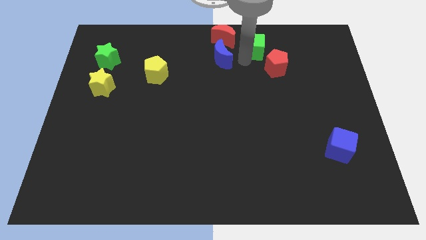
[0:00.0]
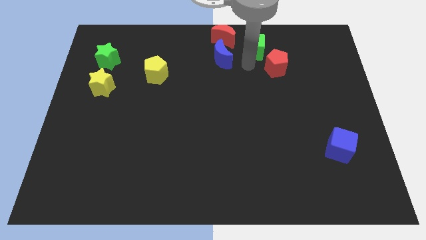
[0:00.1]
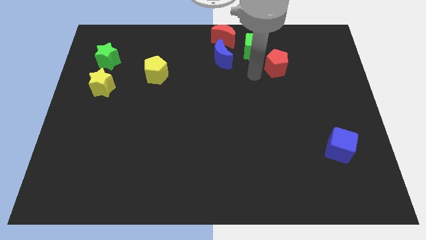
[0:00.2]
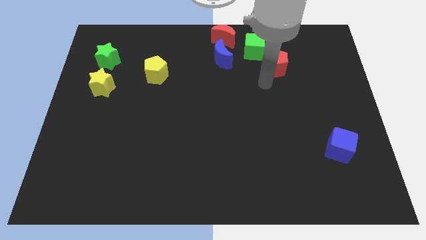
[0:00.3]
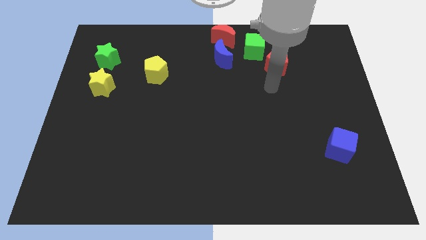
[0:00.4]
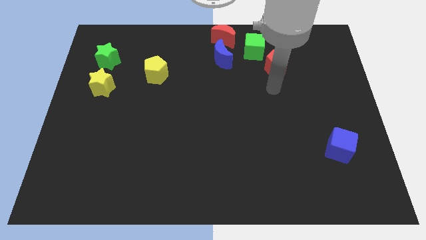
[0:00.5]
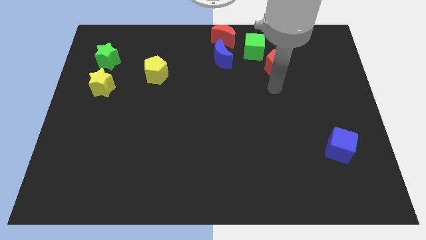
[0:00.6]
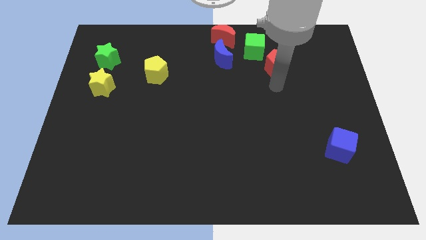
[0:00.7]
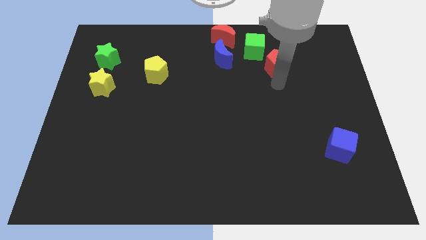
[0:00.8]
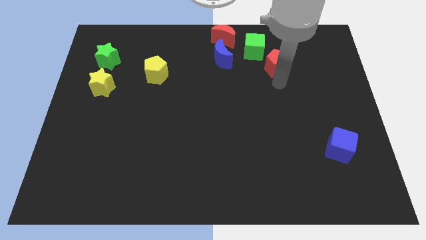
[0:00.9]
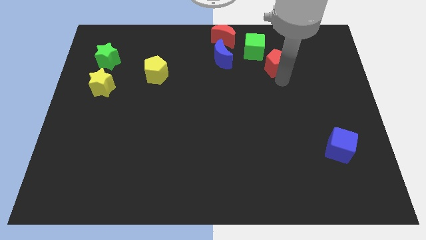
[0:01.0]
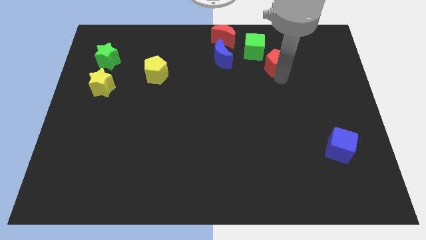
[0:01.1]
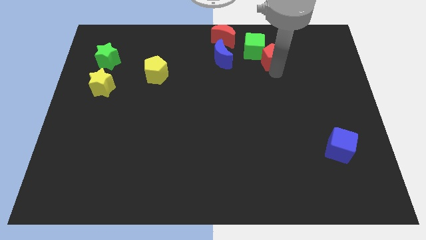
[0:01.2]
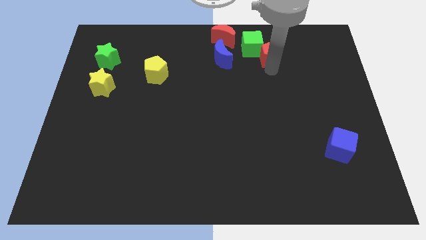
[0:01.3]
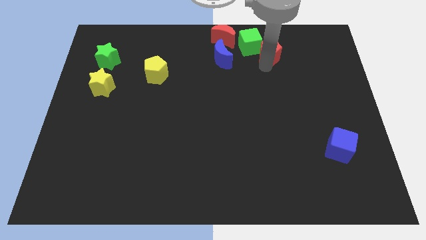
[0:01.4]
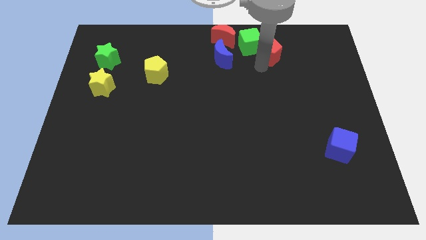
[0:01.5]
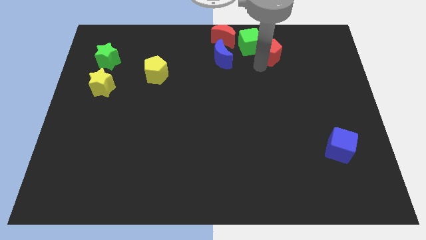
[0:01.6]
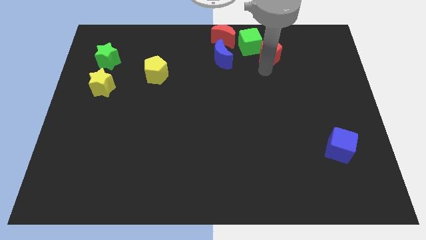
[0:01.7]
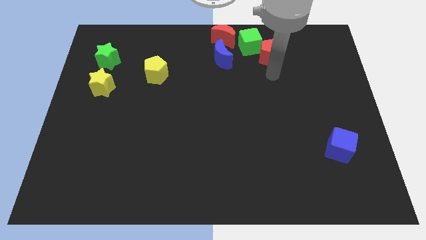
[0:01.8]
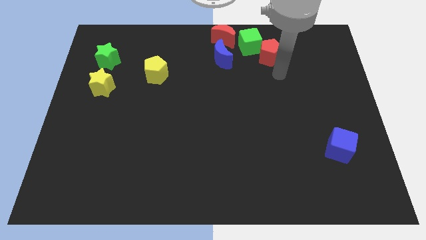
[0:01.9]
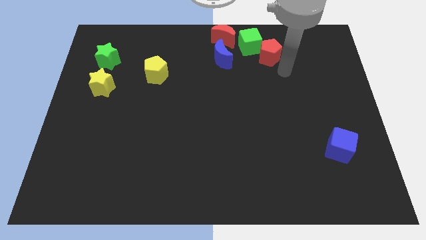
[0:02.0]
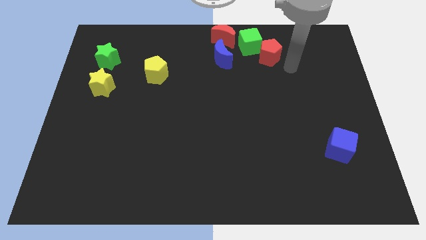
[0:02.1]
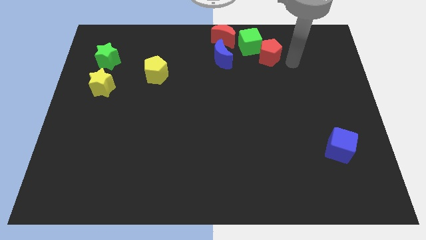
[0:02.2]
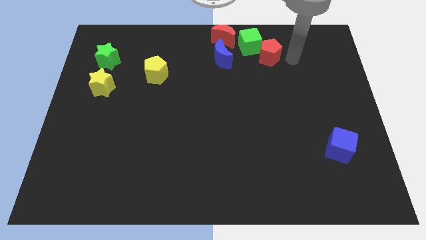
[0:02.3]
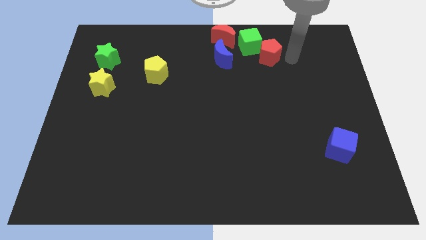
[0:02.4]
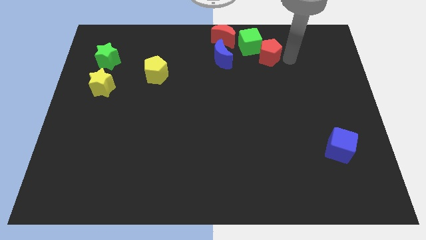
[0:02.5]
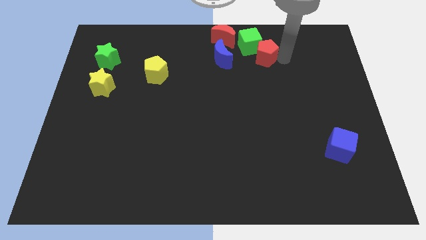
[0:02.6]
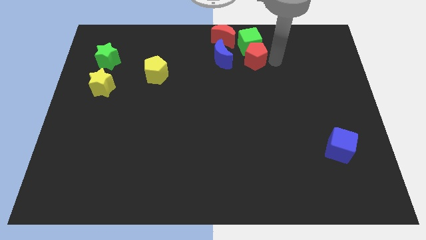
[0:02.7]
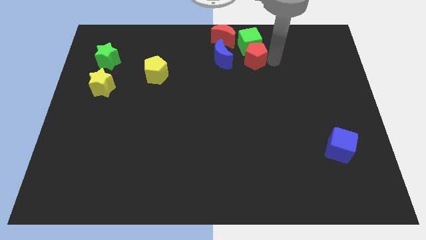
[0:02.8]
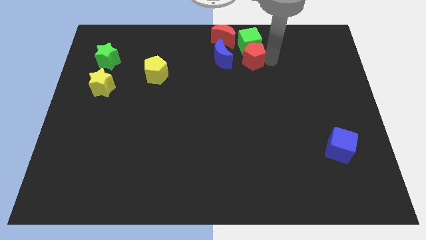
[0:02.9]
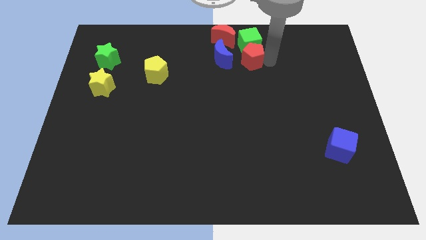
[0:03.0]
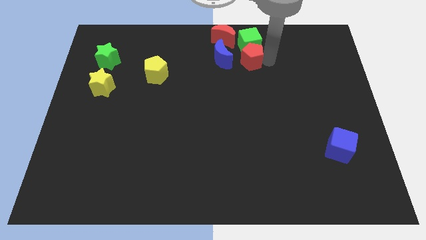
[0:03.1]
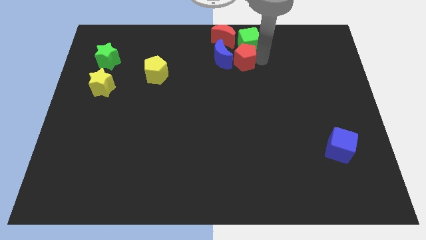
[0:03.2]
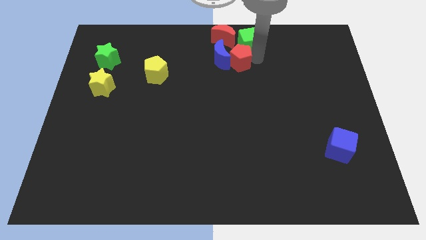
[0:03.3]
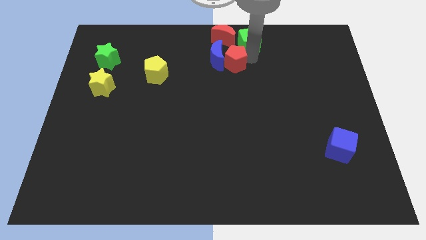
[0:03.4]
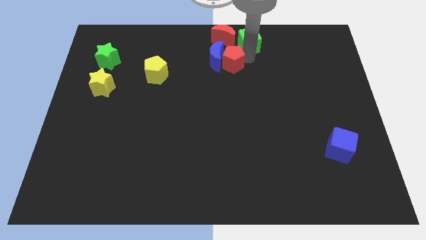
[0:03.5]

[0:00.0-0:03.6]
place the red pentagon right to the blue crescent

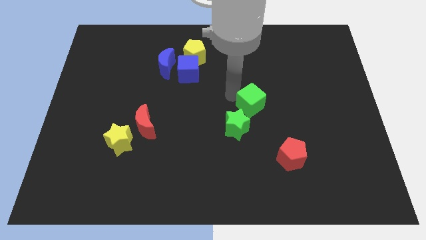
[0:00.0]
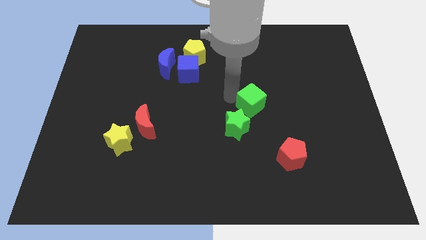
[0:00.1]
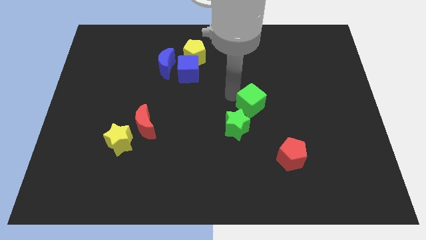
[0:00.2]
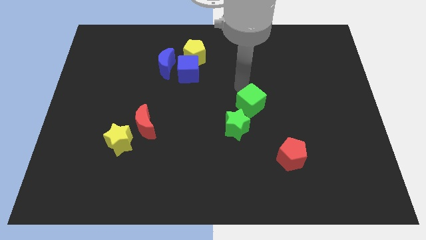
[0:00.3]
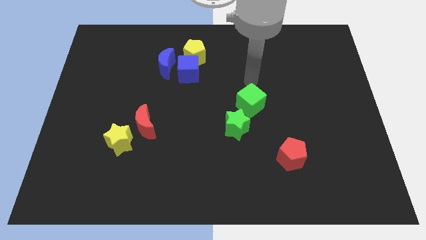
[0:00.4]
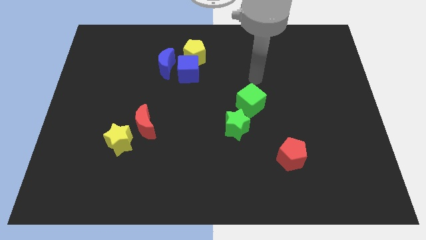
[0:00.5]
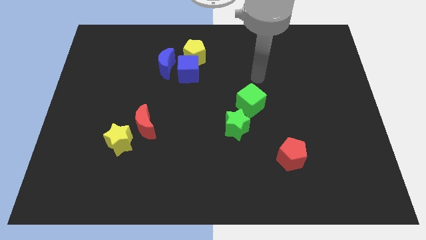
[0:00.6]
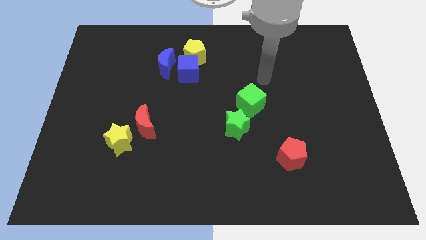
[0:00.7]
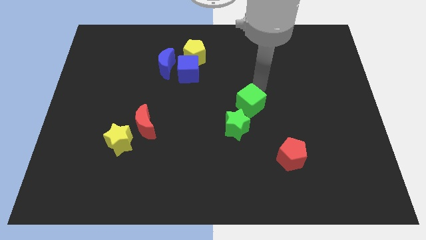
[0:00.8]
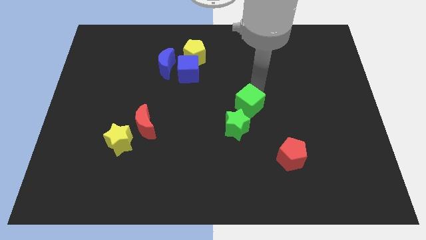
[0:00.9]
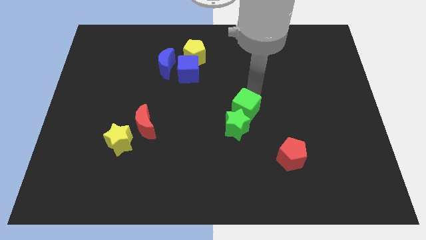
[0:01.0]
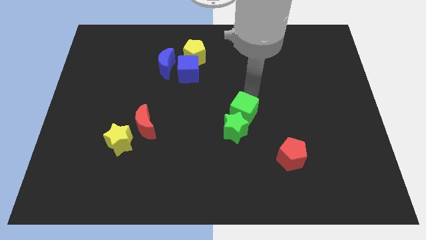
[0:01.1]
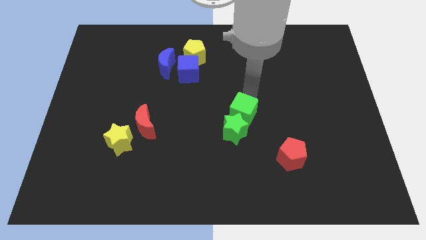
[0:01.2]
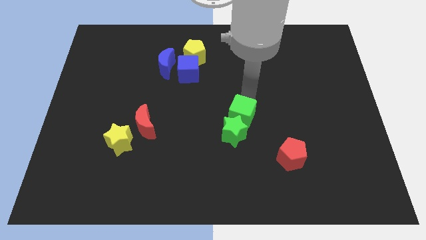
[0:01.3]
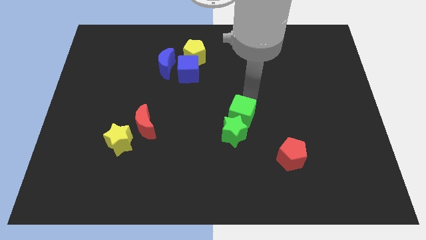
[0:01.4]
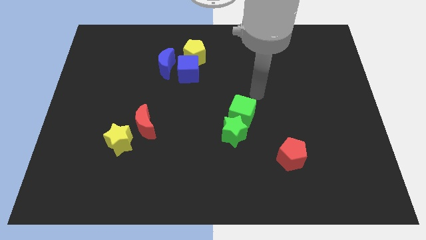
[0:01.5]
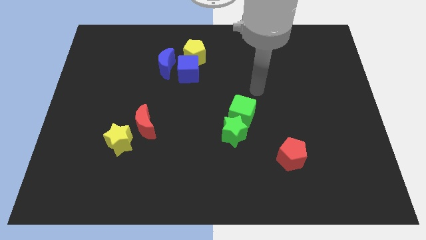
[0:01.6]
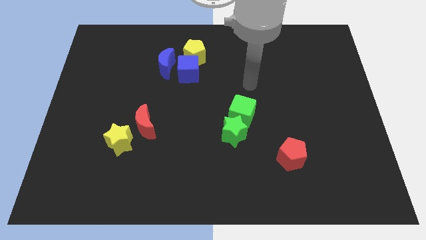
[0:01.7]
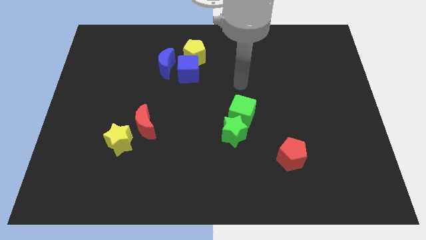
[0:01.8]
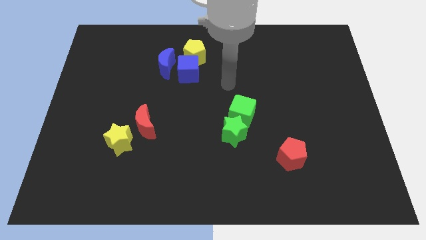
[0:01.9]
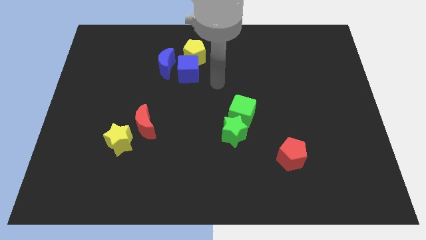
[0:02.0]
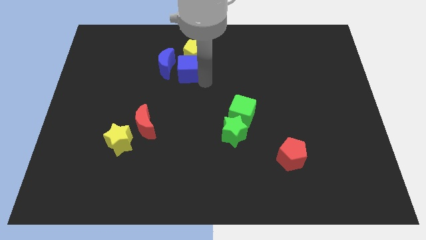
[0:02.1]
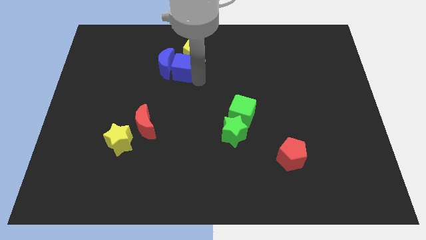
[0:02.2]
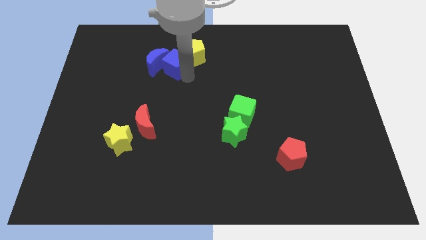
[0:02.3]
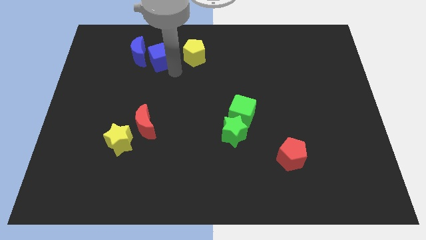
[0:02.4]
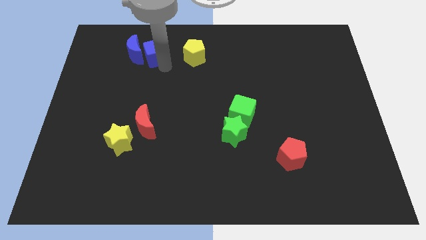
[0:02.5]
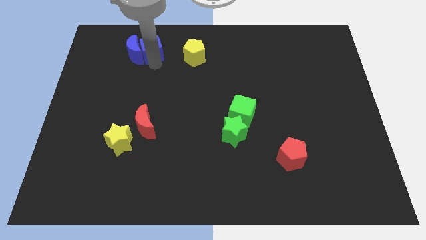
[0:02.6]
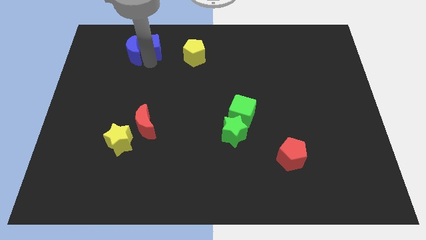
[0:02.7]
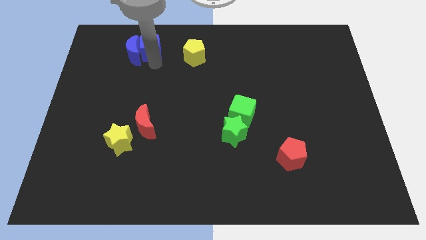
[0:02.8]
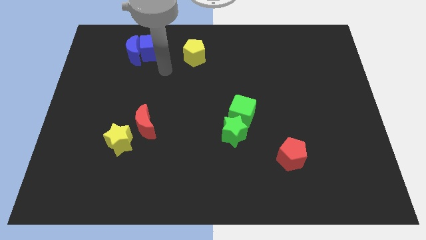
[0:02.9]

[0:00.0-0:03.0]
move the blue cube into the blue moon

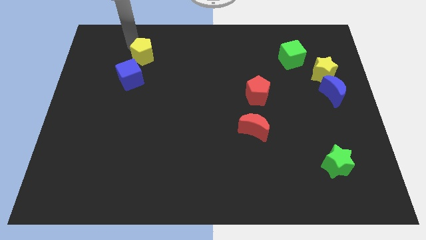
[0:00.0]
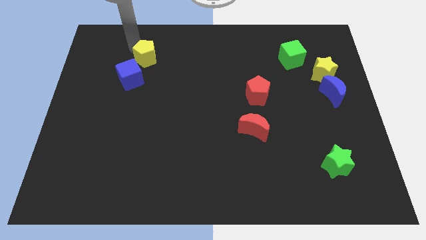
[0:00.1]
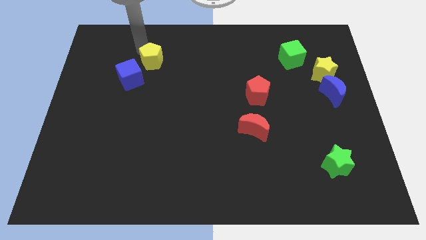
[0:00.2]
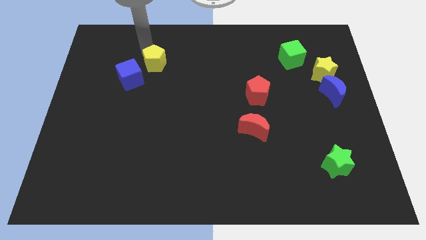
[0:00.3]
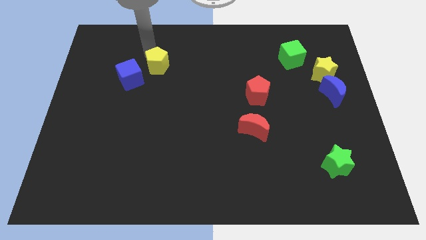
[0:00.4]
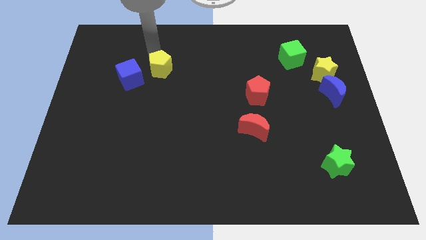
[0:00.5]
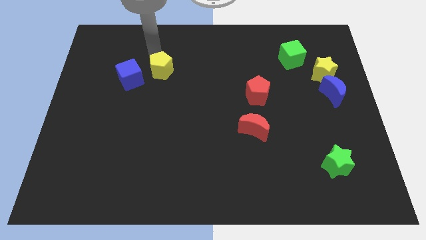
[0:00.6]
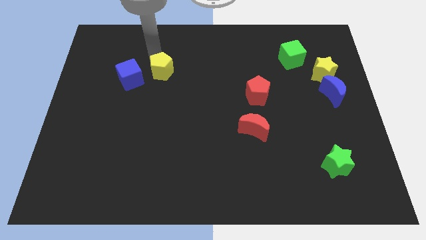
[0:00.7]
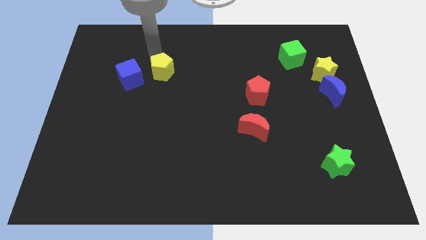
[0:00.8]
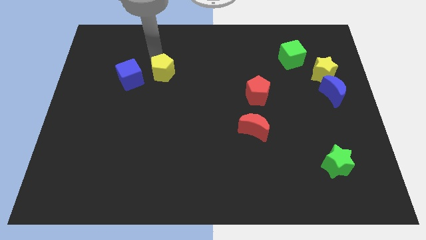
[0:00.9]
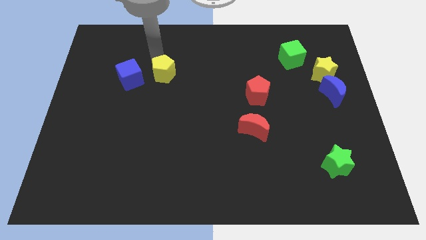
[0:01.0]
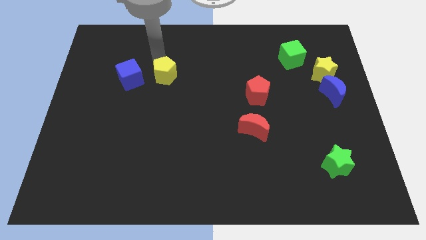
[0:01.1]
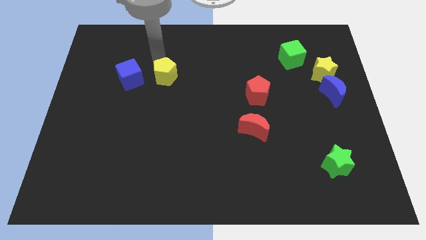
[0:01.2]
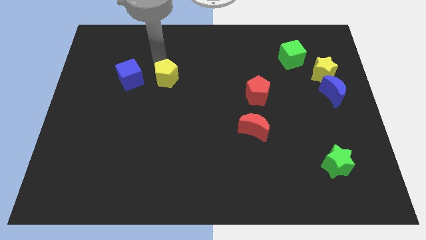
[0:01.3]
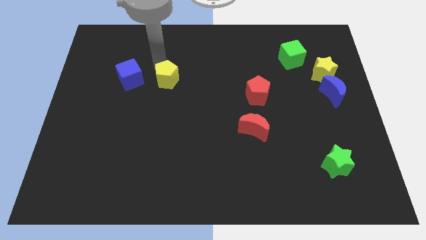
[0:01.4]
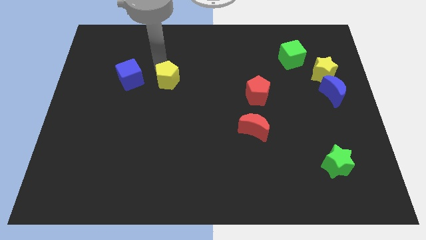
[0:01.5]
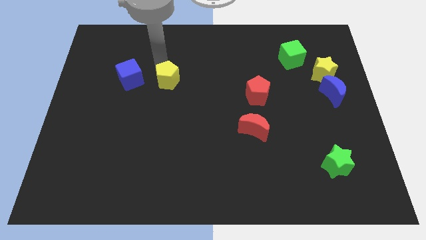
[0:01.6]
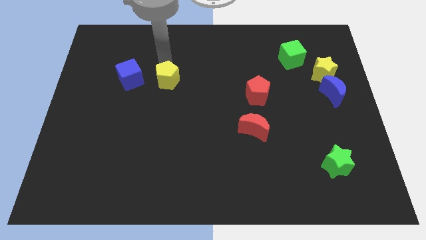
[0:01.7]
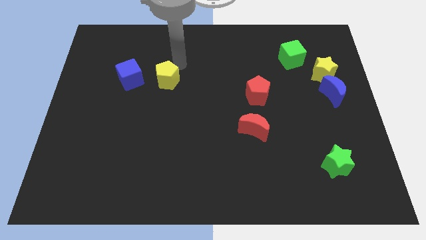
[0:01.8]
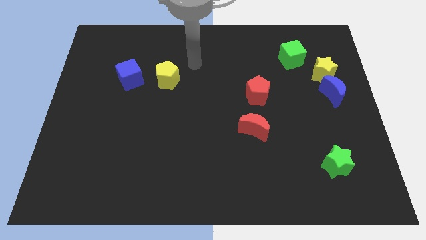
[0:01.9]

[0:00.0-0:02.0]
place the yellow pentagon in between the red pentagon and blue cube

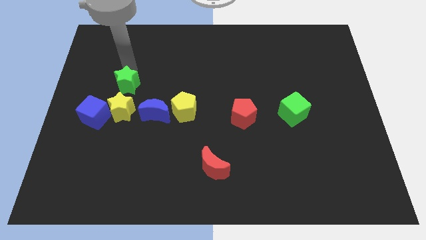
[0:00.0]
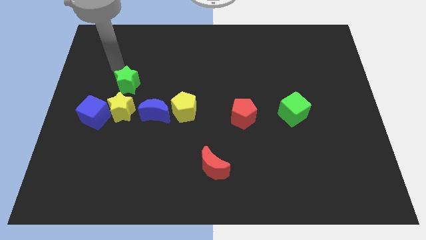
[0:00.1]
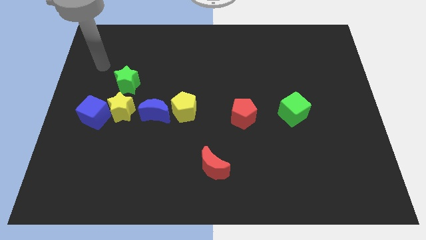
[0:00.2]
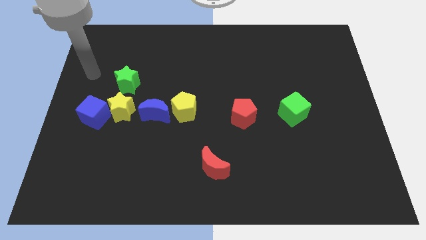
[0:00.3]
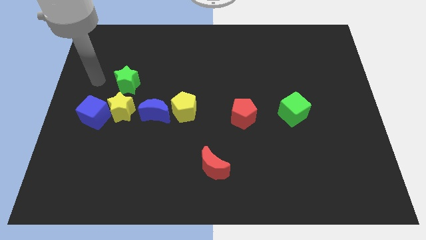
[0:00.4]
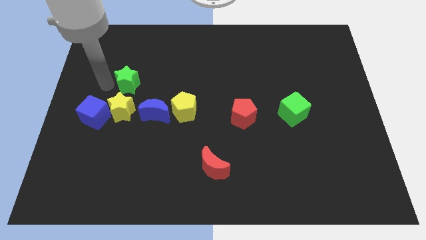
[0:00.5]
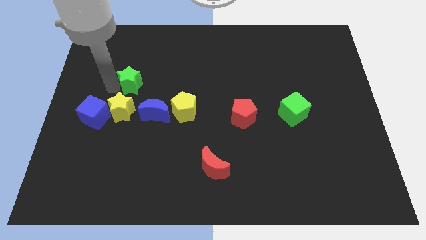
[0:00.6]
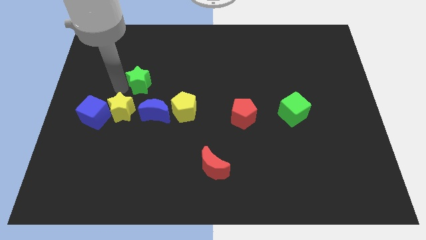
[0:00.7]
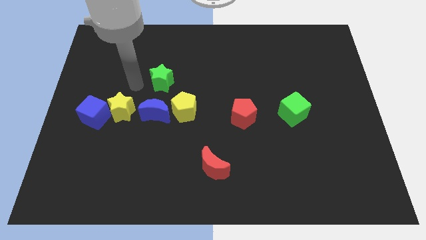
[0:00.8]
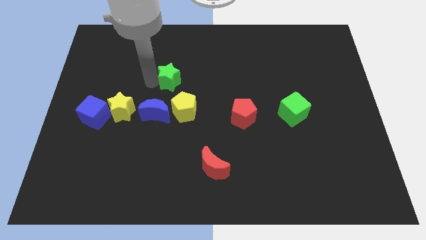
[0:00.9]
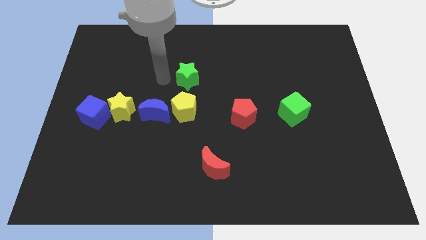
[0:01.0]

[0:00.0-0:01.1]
move the green star above the yellow pentagon
